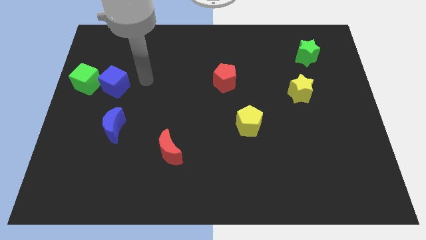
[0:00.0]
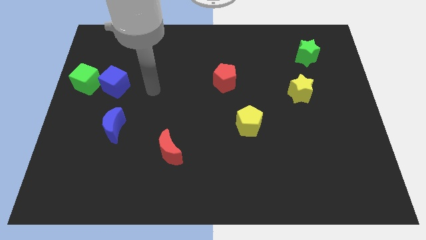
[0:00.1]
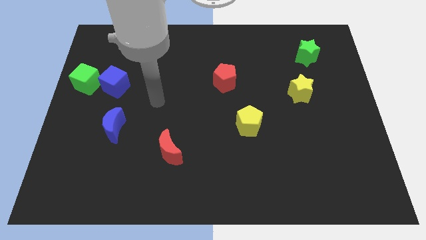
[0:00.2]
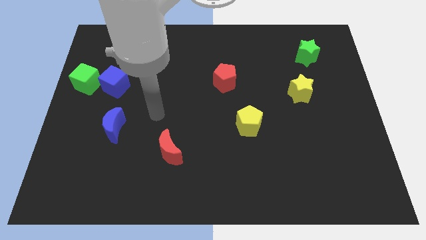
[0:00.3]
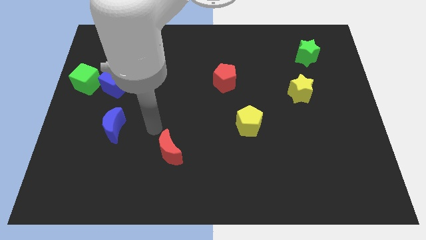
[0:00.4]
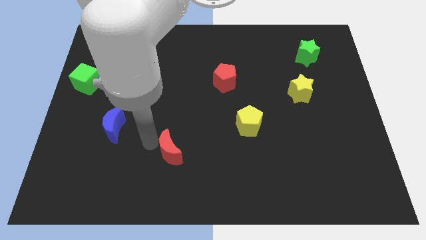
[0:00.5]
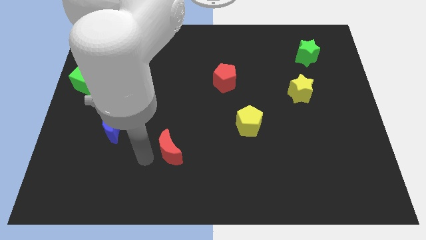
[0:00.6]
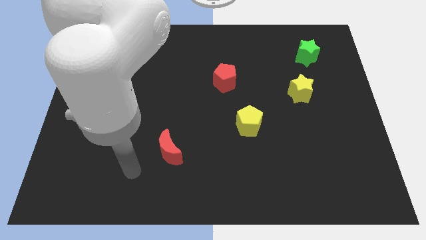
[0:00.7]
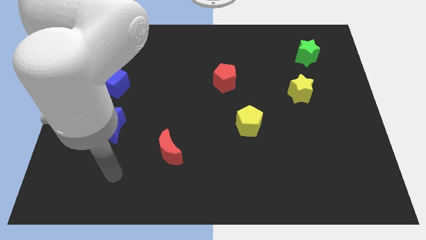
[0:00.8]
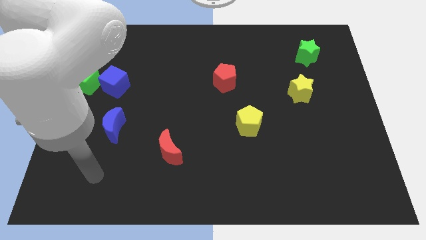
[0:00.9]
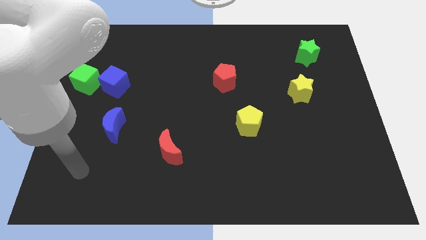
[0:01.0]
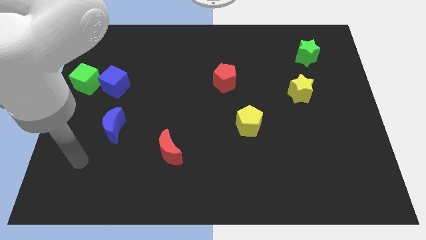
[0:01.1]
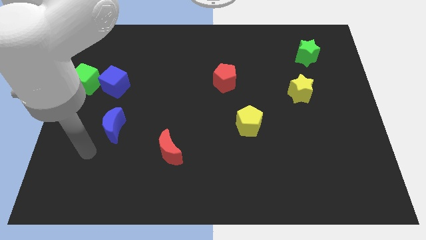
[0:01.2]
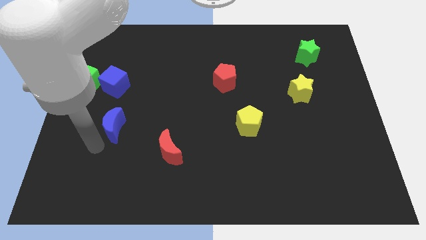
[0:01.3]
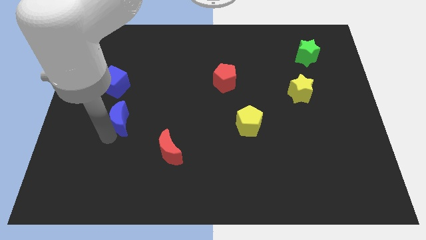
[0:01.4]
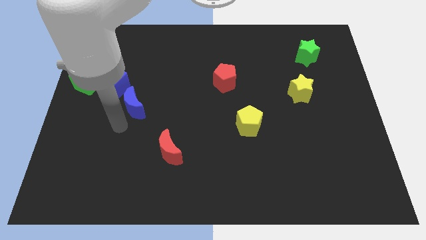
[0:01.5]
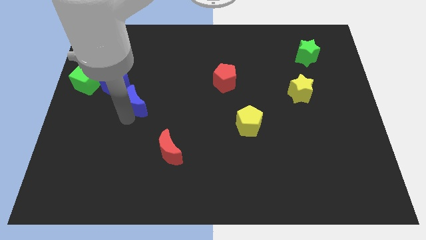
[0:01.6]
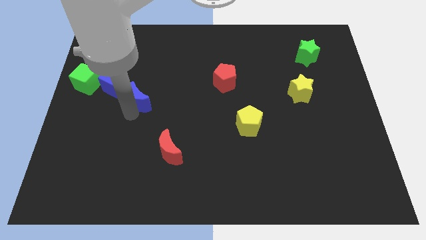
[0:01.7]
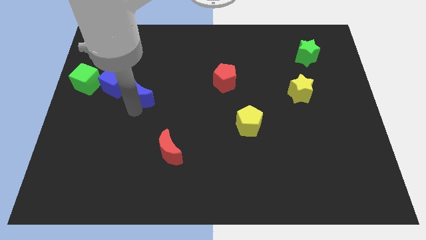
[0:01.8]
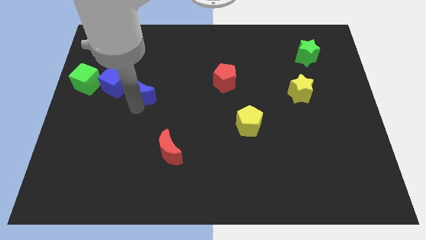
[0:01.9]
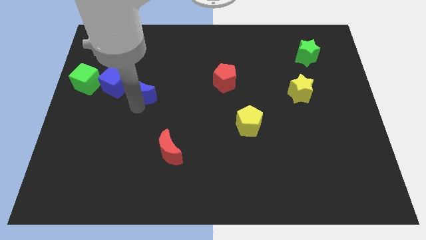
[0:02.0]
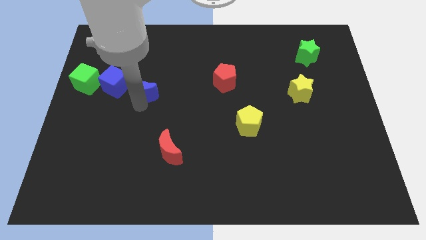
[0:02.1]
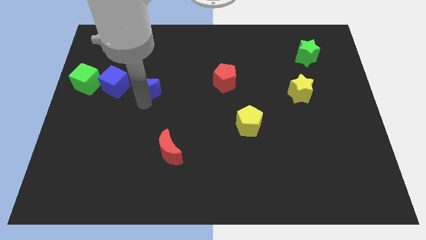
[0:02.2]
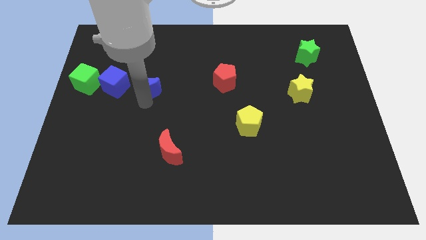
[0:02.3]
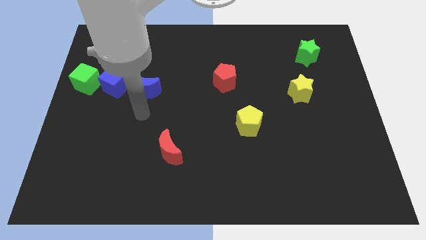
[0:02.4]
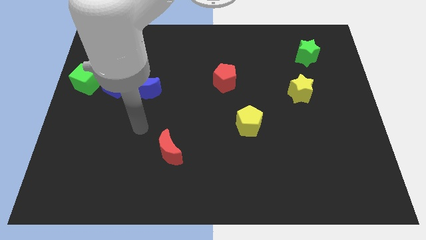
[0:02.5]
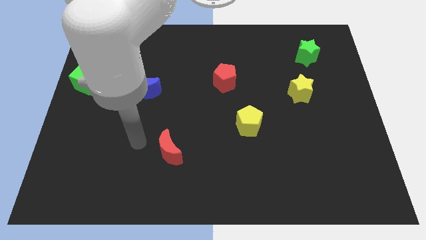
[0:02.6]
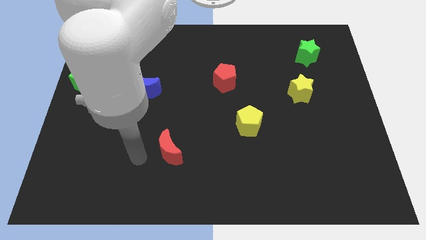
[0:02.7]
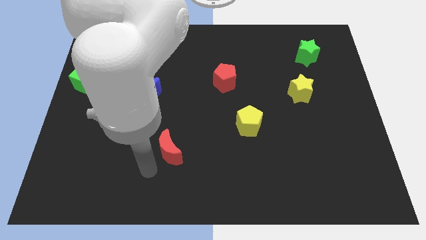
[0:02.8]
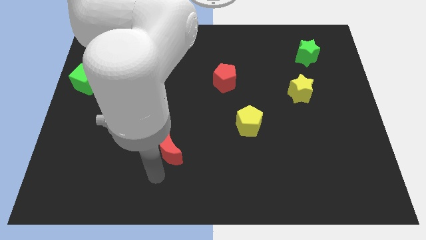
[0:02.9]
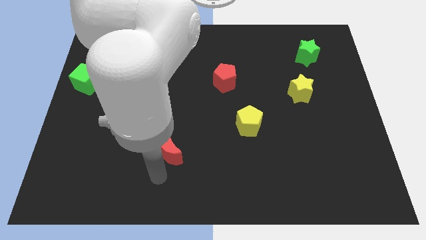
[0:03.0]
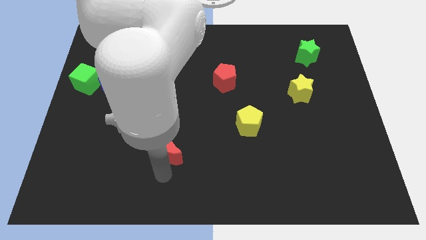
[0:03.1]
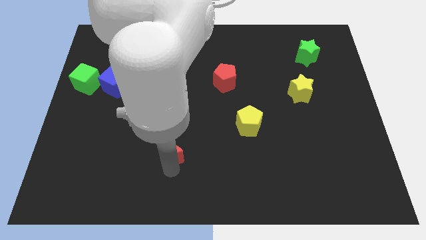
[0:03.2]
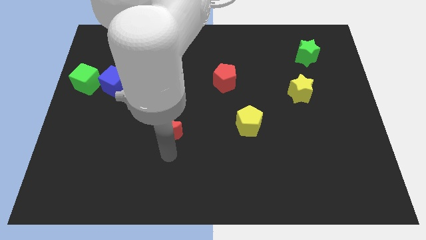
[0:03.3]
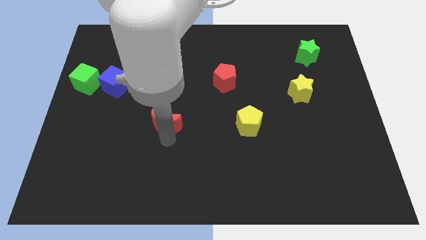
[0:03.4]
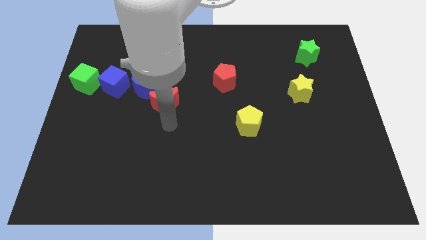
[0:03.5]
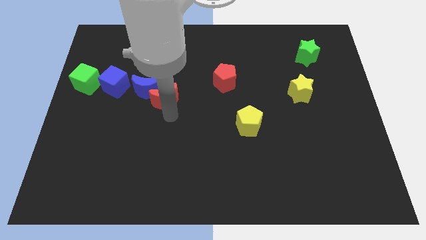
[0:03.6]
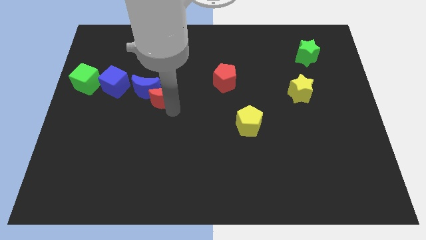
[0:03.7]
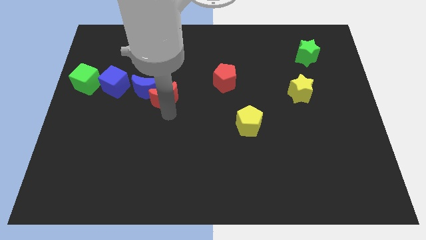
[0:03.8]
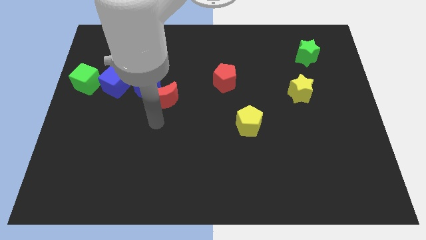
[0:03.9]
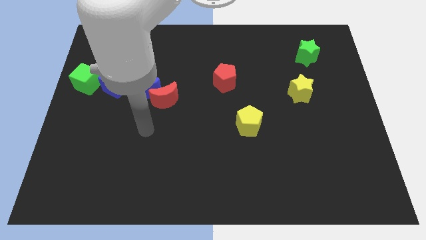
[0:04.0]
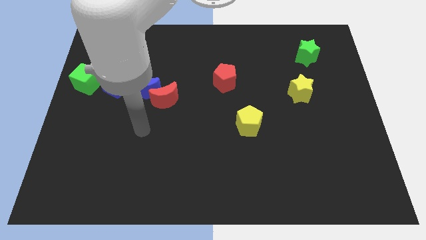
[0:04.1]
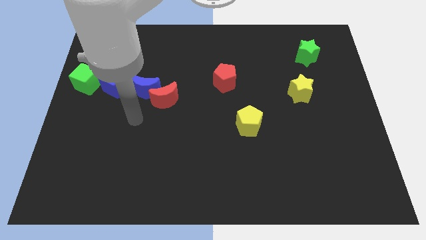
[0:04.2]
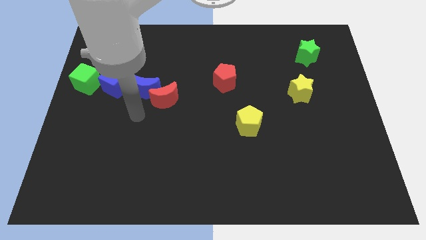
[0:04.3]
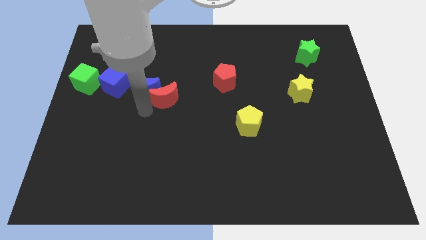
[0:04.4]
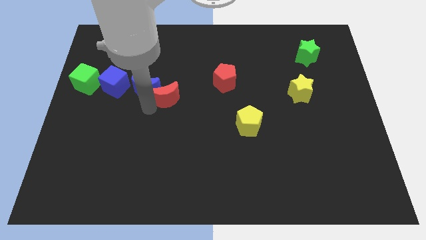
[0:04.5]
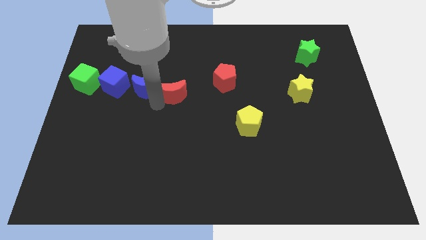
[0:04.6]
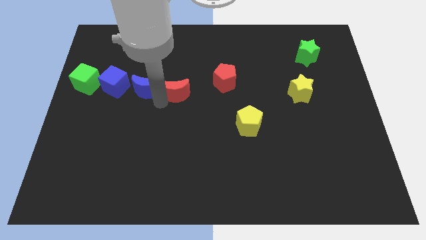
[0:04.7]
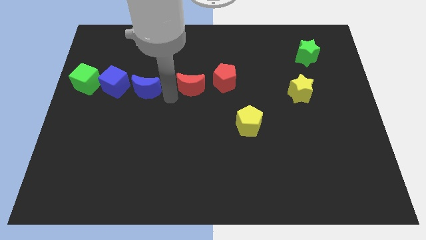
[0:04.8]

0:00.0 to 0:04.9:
move the blue crescent and red crescent in between the blue cube and red pentagon

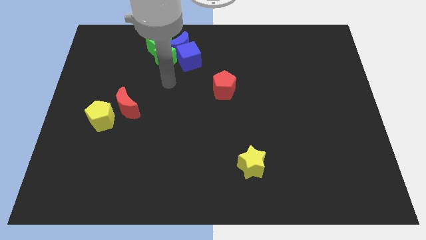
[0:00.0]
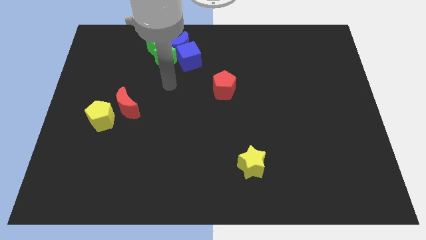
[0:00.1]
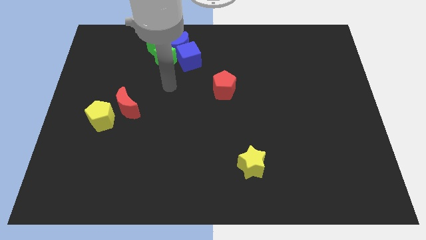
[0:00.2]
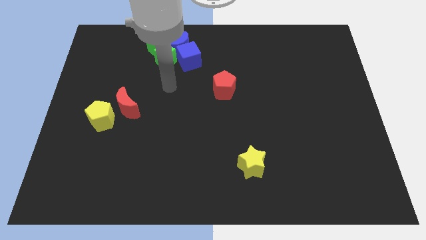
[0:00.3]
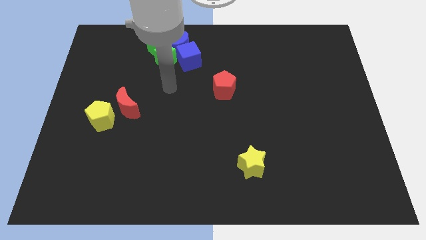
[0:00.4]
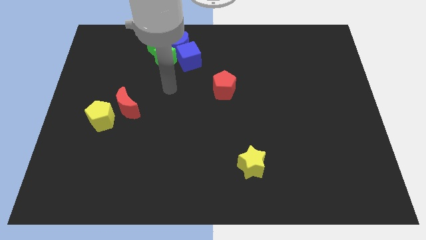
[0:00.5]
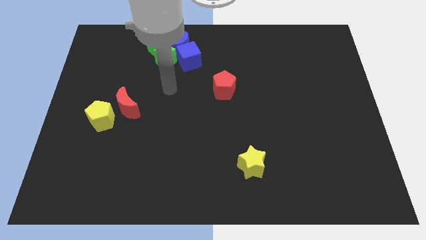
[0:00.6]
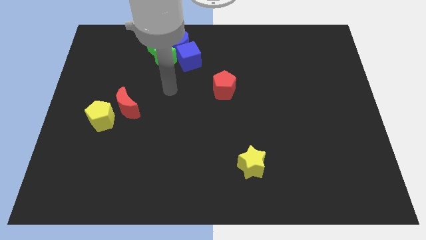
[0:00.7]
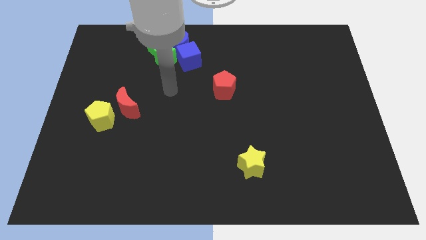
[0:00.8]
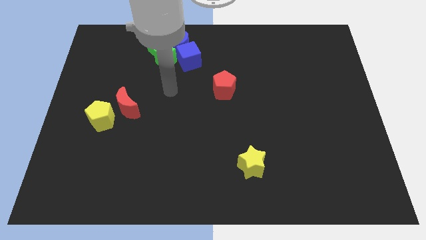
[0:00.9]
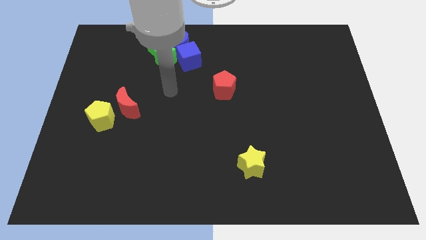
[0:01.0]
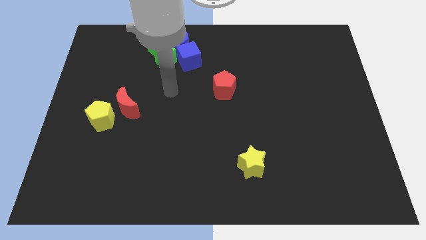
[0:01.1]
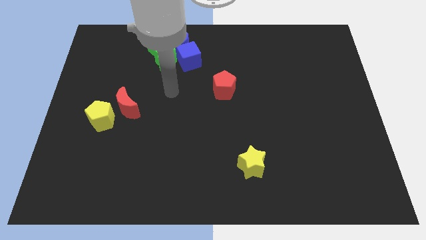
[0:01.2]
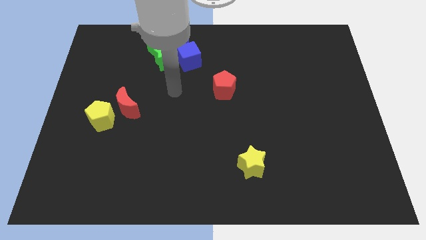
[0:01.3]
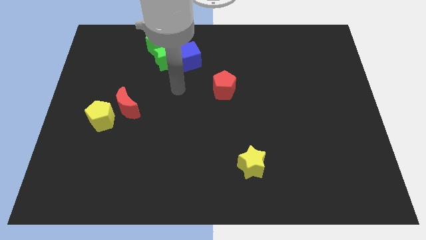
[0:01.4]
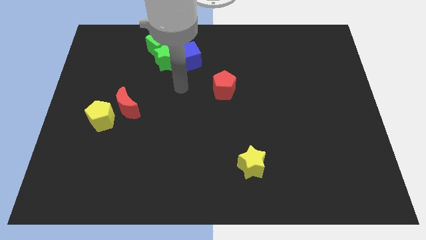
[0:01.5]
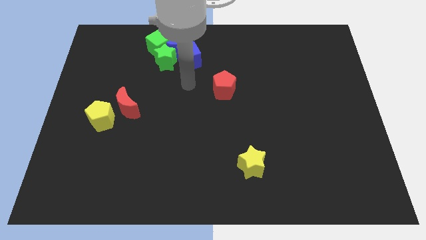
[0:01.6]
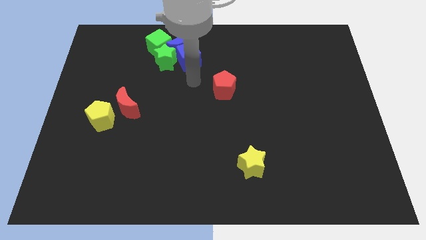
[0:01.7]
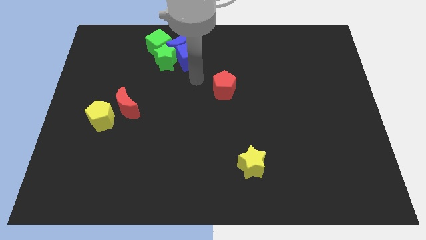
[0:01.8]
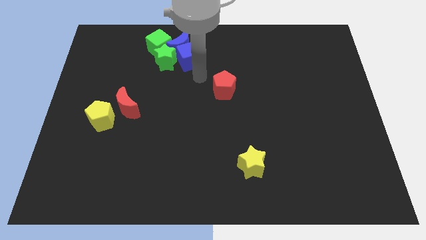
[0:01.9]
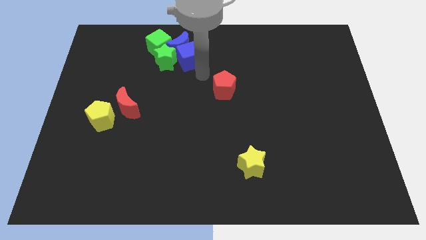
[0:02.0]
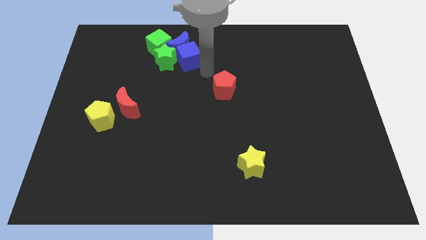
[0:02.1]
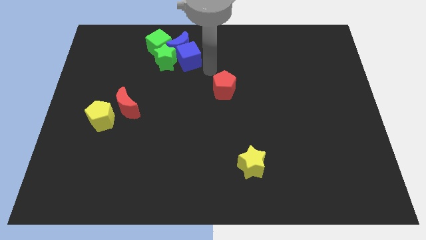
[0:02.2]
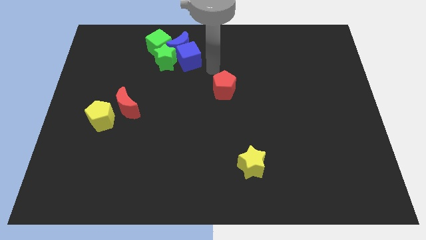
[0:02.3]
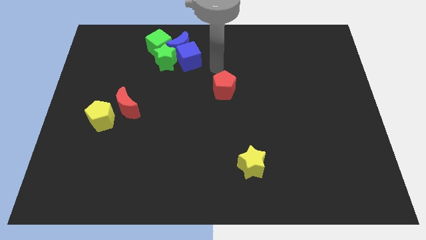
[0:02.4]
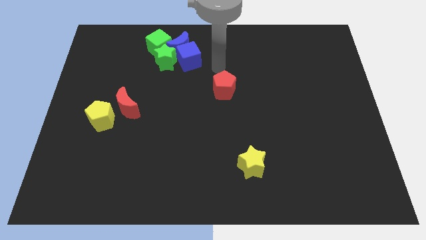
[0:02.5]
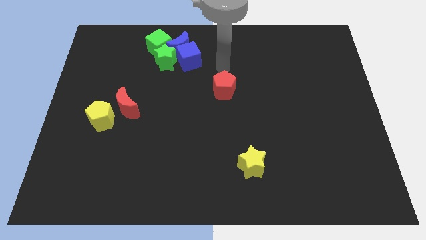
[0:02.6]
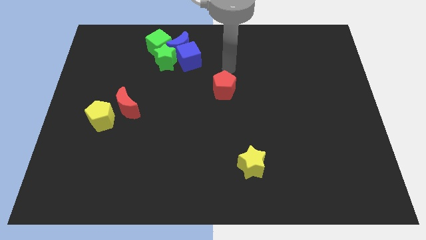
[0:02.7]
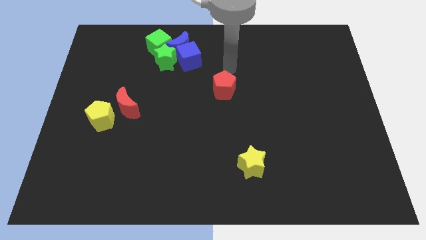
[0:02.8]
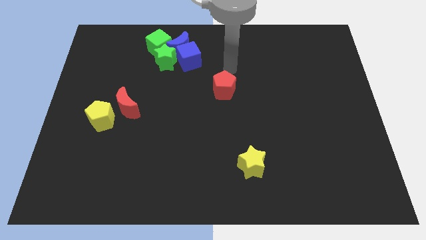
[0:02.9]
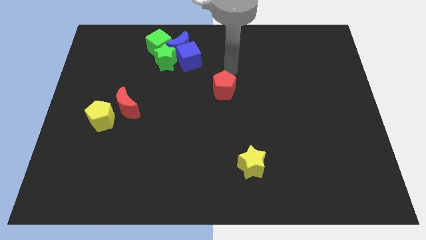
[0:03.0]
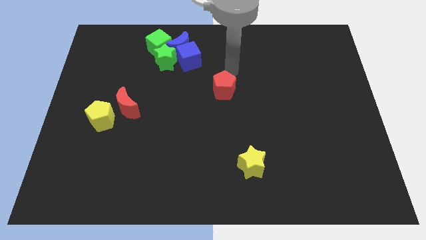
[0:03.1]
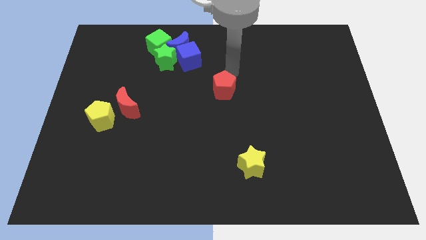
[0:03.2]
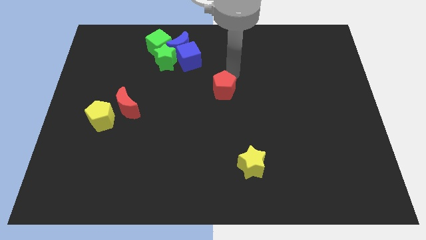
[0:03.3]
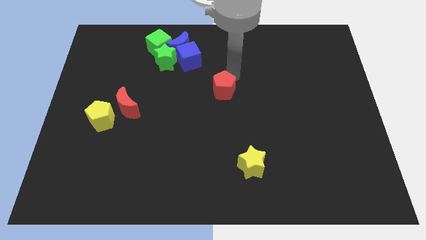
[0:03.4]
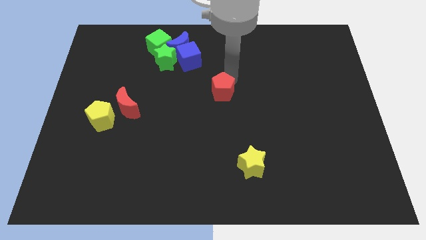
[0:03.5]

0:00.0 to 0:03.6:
move the arm towards the top of red pentagon

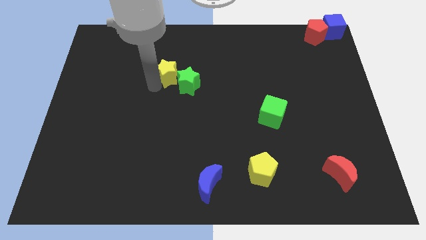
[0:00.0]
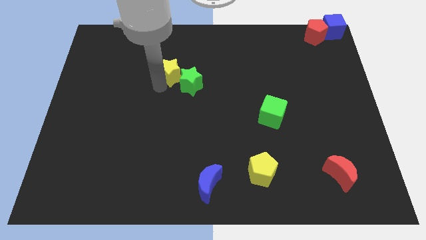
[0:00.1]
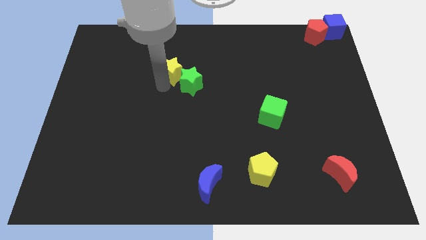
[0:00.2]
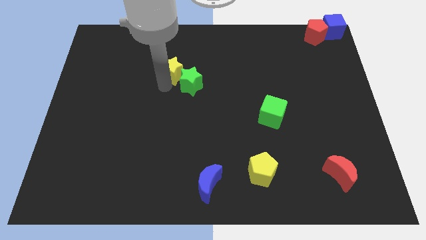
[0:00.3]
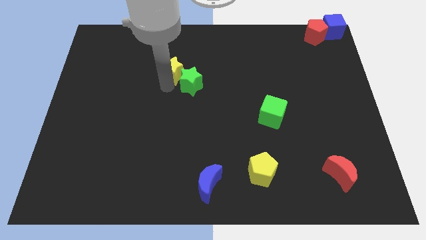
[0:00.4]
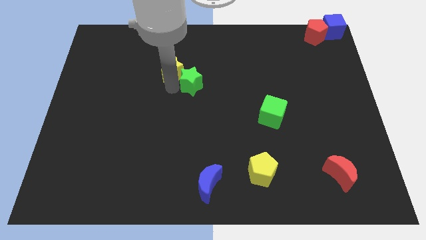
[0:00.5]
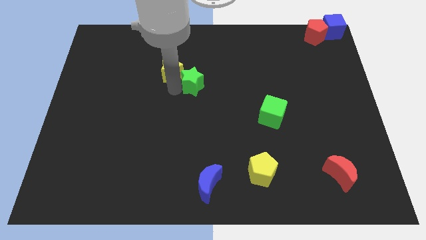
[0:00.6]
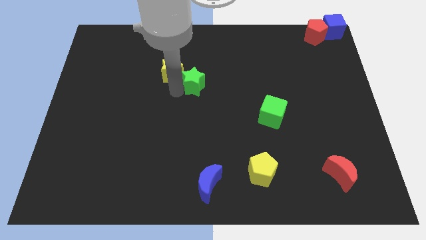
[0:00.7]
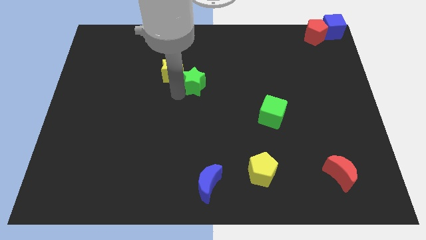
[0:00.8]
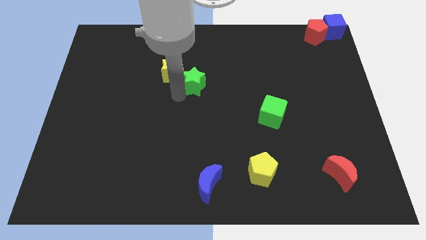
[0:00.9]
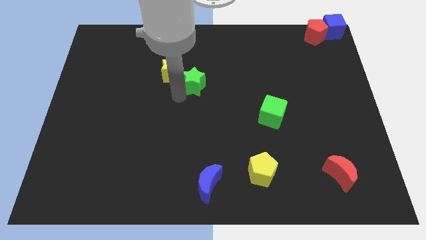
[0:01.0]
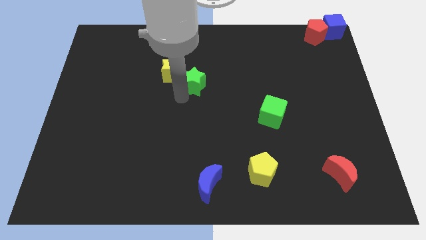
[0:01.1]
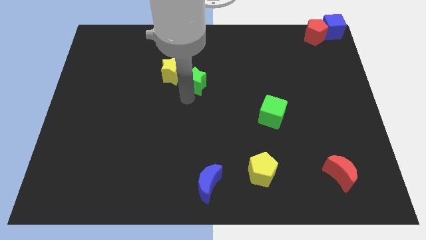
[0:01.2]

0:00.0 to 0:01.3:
move your arm to the center of the board
